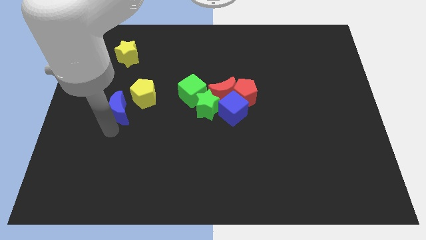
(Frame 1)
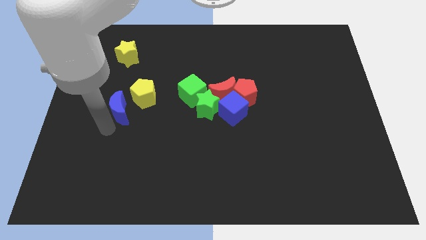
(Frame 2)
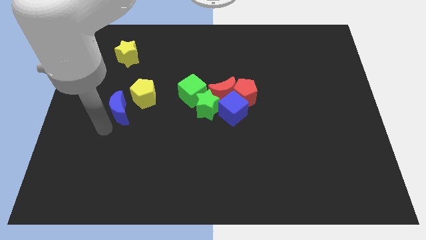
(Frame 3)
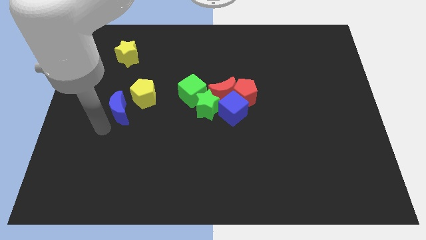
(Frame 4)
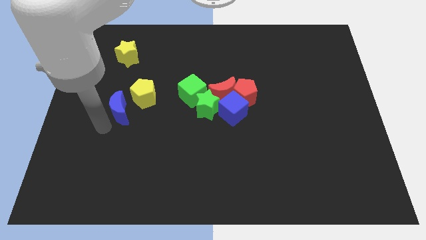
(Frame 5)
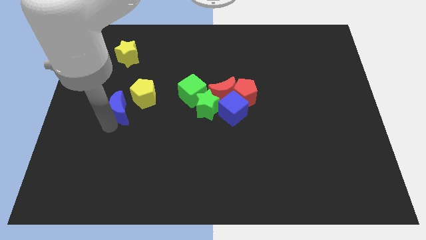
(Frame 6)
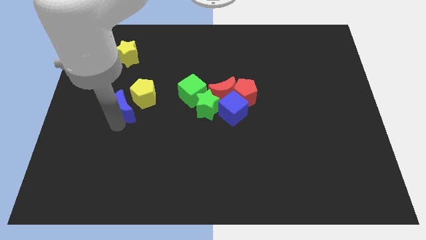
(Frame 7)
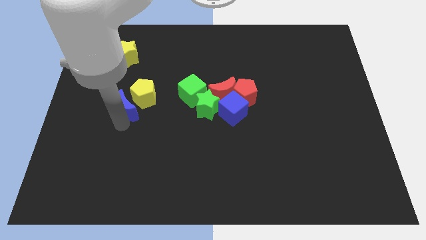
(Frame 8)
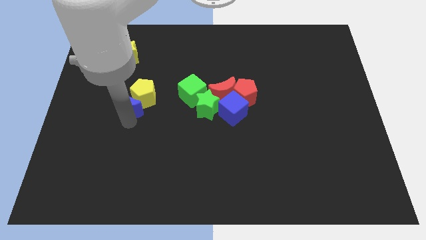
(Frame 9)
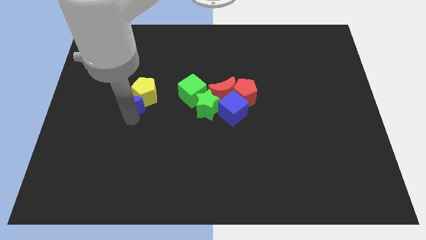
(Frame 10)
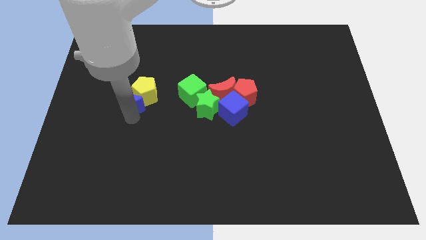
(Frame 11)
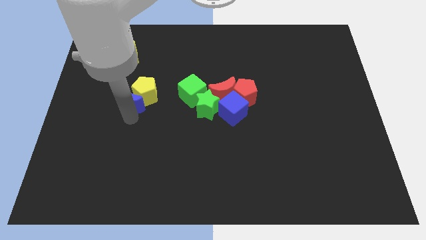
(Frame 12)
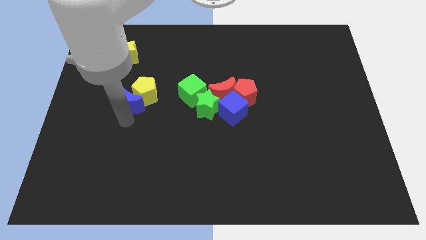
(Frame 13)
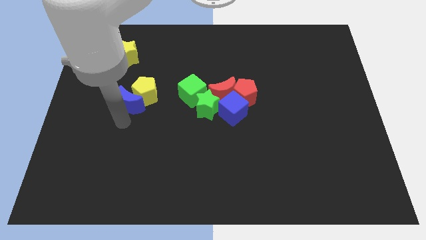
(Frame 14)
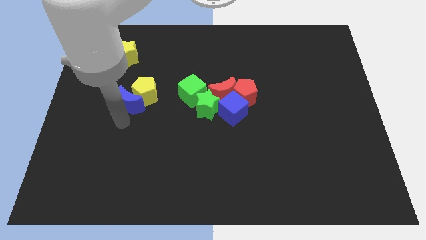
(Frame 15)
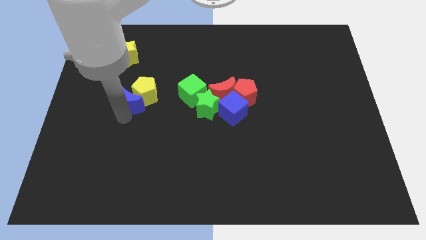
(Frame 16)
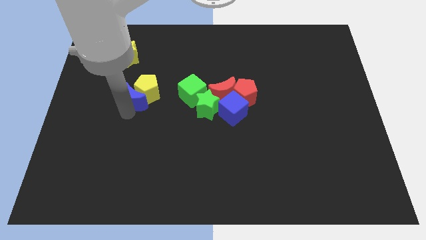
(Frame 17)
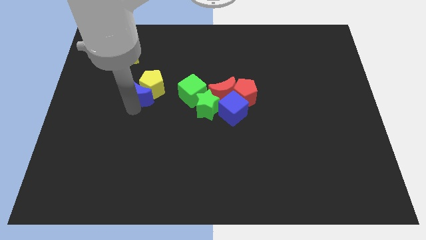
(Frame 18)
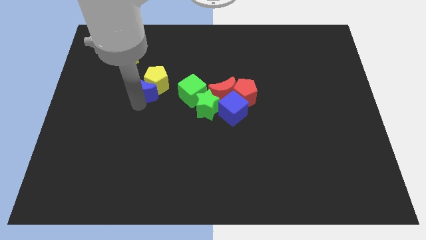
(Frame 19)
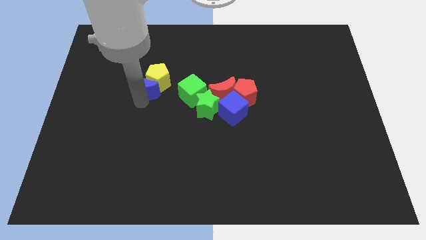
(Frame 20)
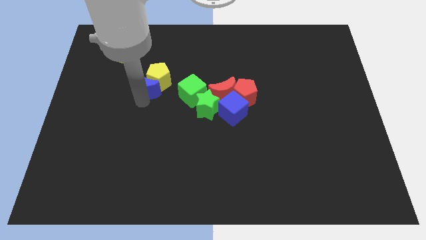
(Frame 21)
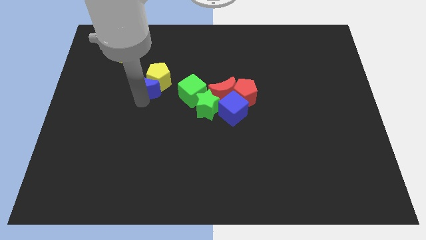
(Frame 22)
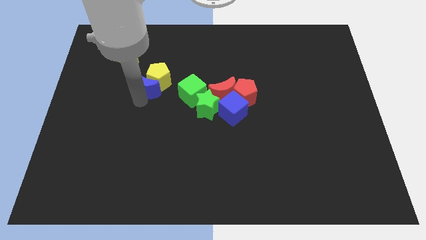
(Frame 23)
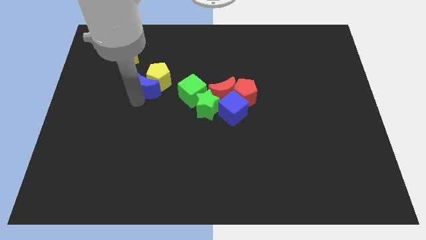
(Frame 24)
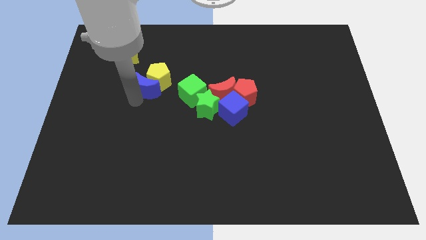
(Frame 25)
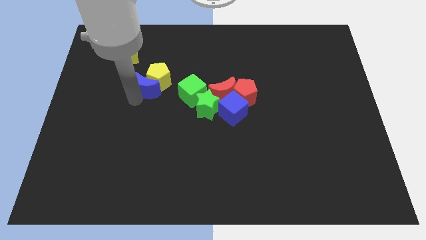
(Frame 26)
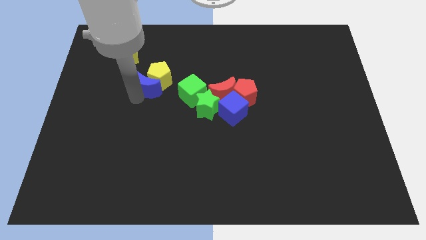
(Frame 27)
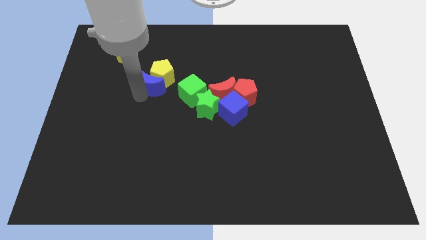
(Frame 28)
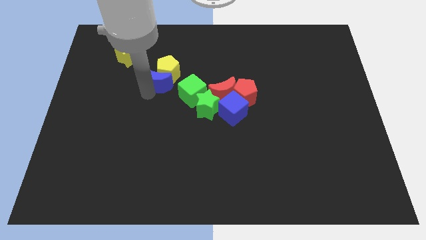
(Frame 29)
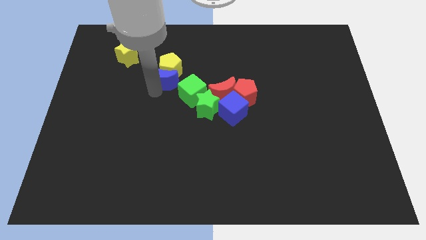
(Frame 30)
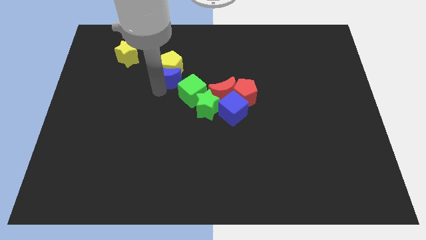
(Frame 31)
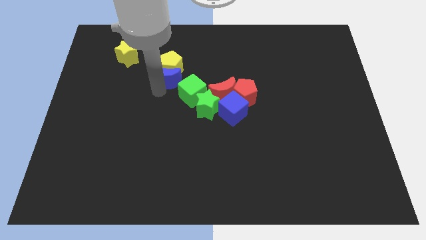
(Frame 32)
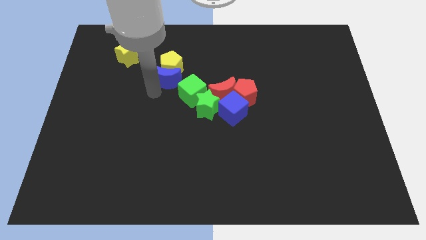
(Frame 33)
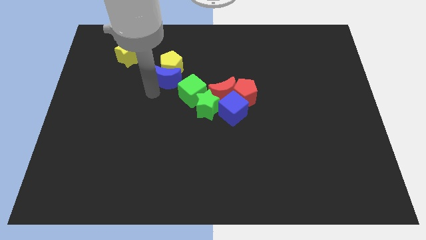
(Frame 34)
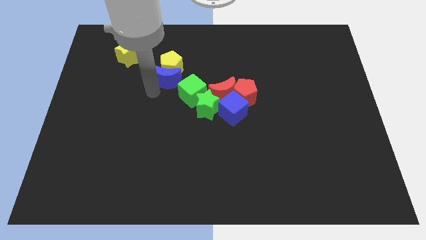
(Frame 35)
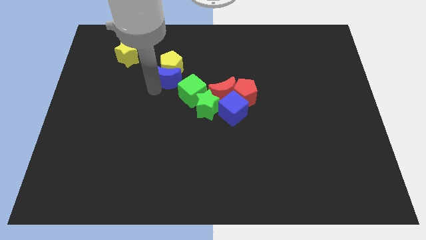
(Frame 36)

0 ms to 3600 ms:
move the blue crescent along with the yellow pentagon to the top

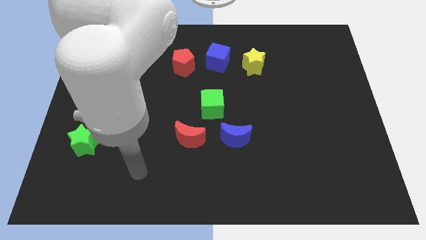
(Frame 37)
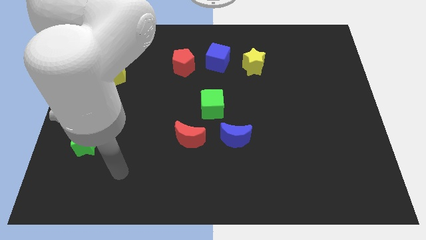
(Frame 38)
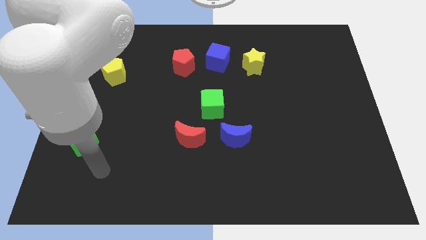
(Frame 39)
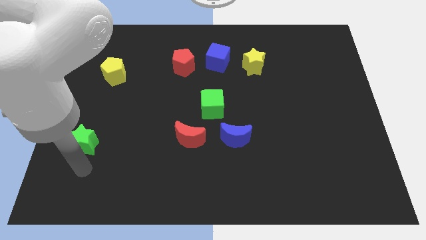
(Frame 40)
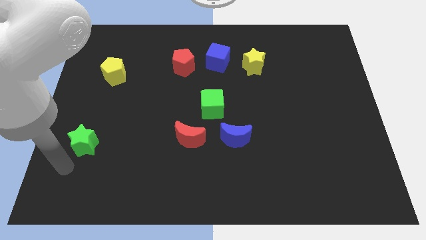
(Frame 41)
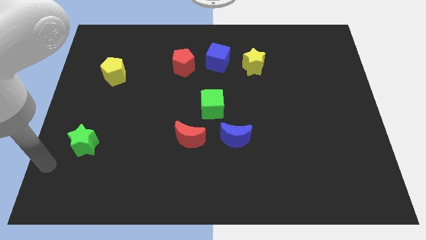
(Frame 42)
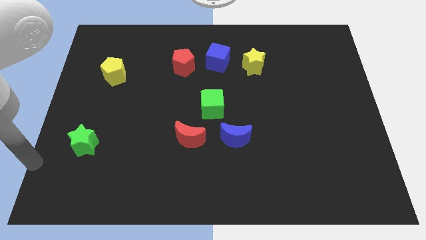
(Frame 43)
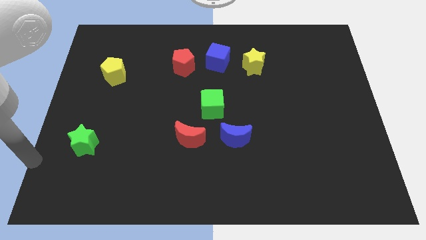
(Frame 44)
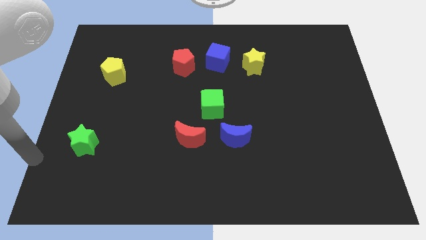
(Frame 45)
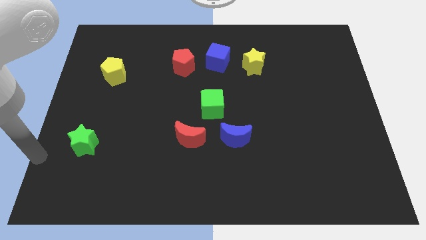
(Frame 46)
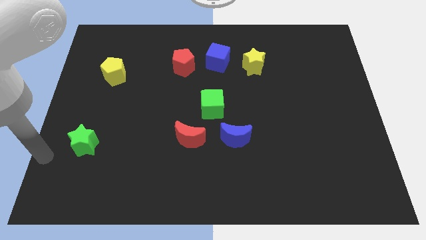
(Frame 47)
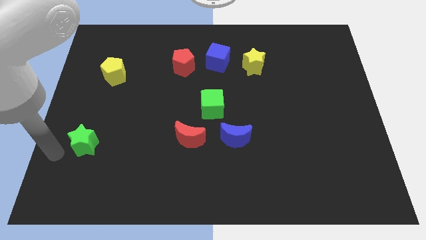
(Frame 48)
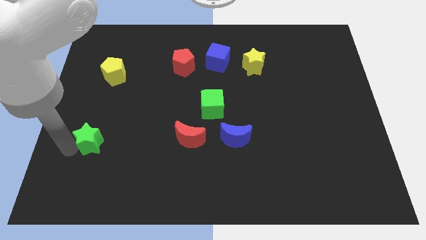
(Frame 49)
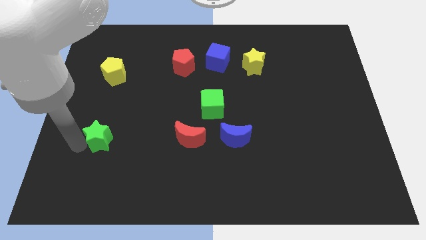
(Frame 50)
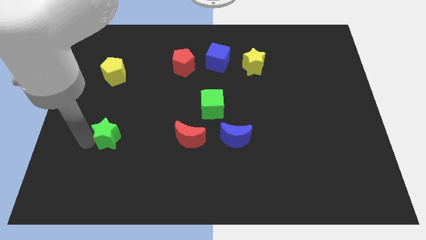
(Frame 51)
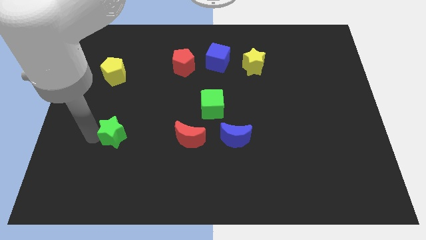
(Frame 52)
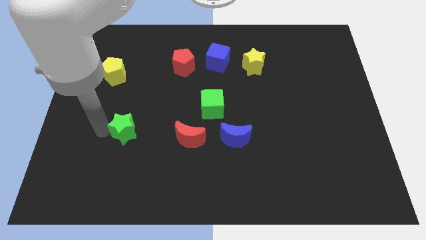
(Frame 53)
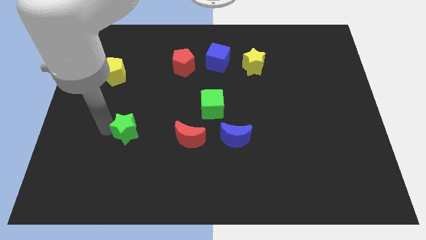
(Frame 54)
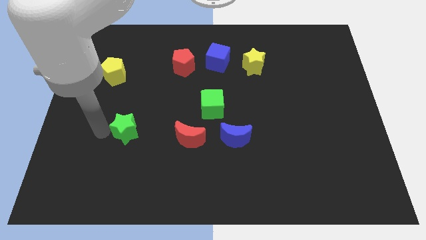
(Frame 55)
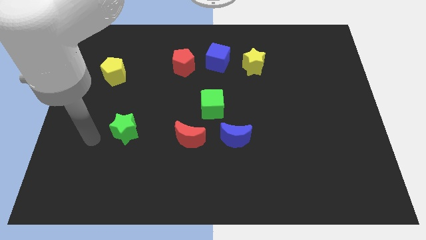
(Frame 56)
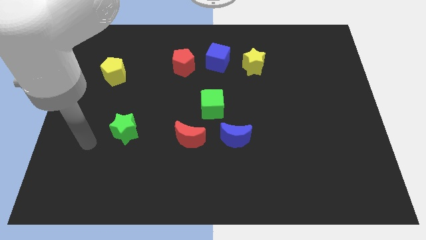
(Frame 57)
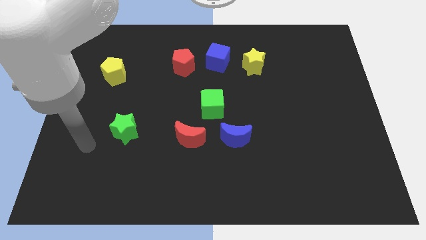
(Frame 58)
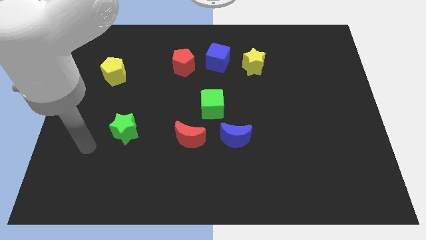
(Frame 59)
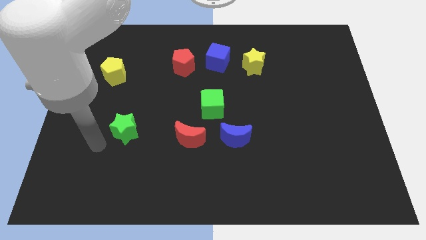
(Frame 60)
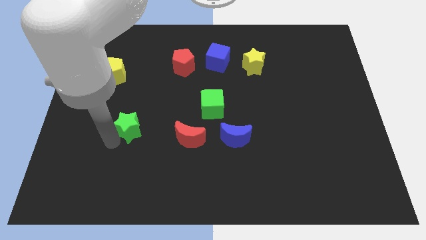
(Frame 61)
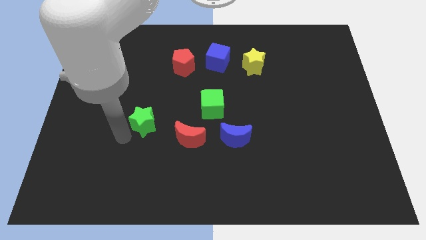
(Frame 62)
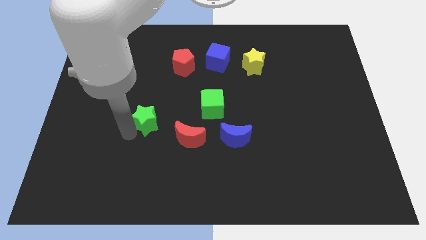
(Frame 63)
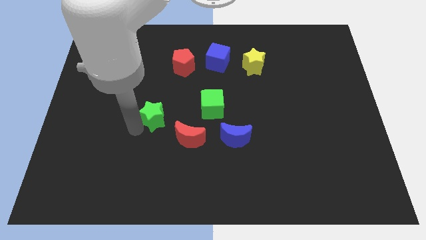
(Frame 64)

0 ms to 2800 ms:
move the green star between yellow pentagona nd red moon

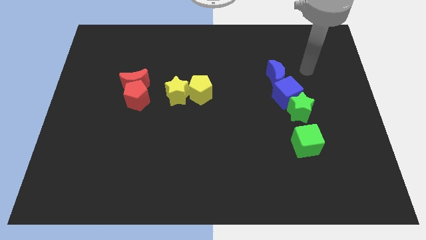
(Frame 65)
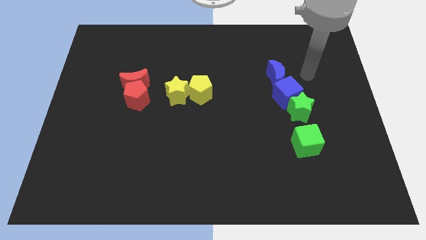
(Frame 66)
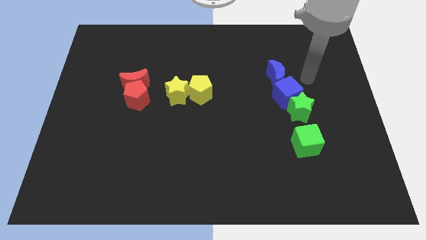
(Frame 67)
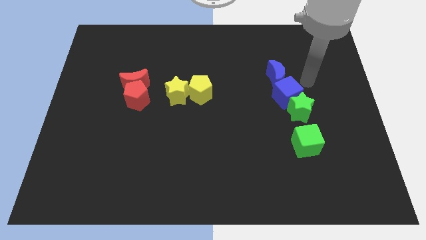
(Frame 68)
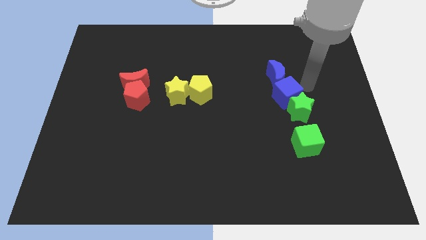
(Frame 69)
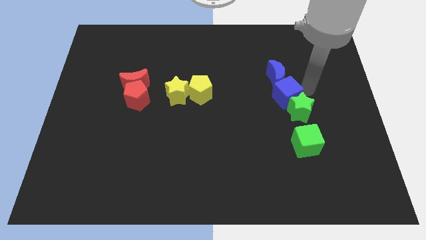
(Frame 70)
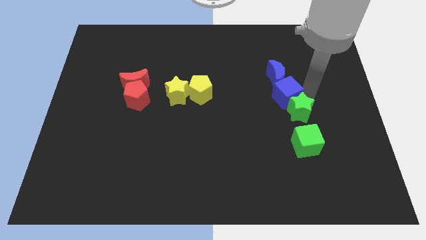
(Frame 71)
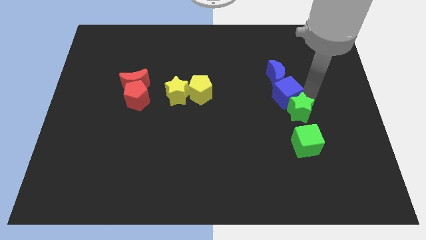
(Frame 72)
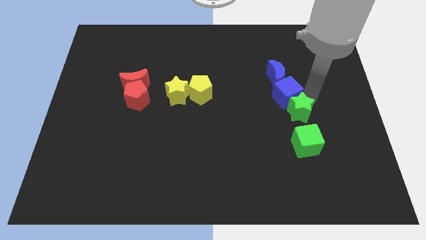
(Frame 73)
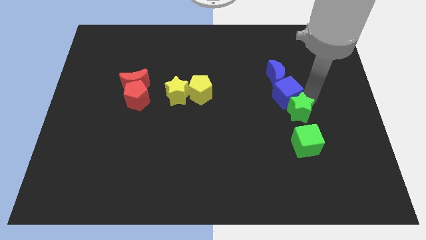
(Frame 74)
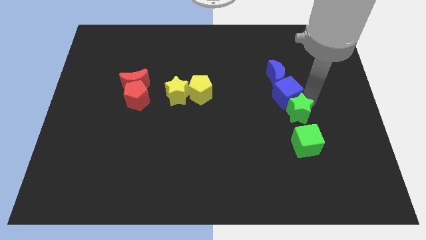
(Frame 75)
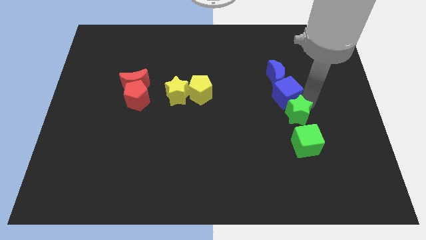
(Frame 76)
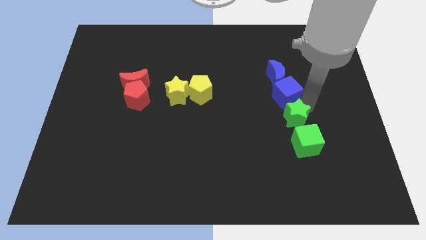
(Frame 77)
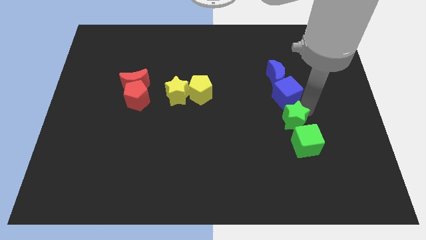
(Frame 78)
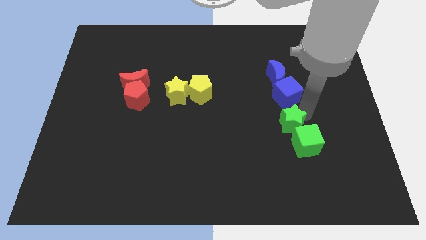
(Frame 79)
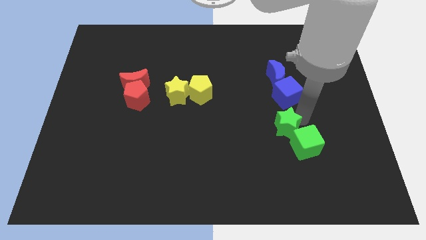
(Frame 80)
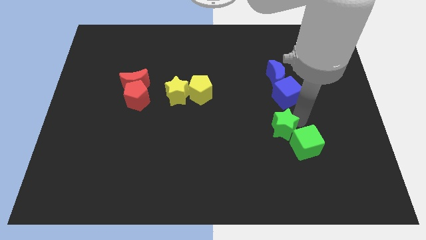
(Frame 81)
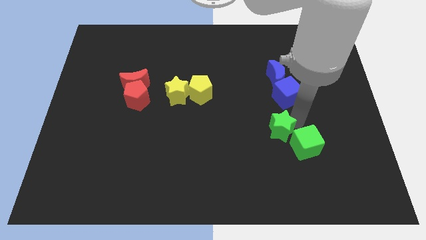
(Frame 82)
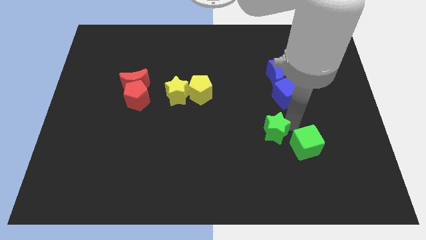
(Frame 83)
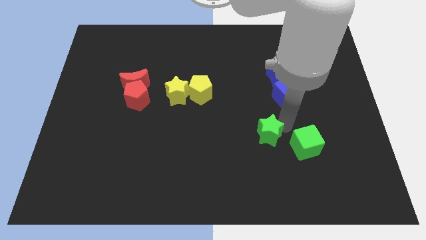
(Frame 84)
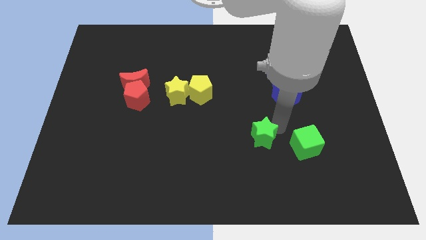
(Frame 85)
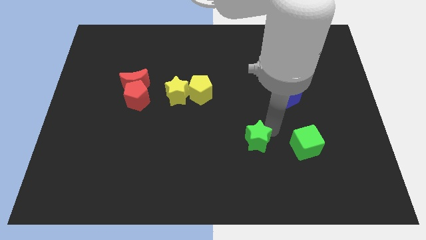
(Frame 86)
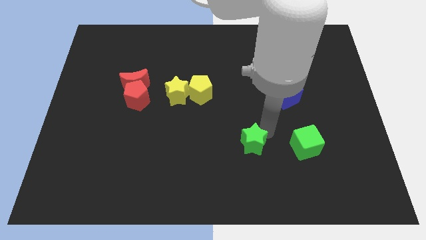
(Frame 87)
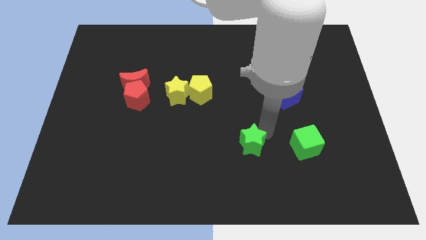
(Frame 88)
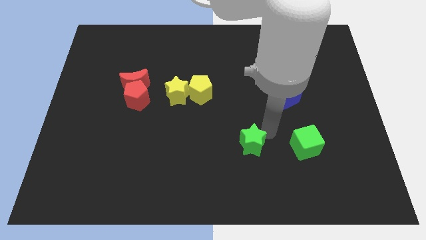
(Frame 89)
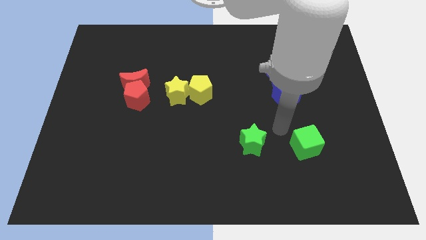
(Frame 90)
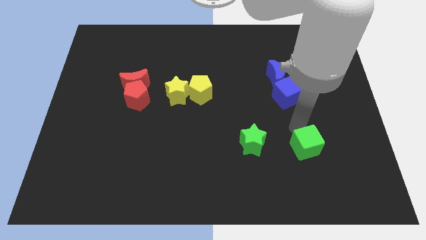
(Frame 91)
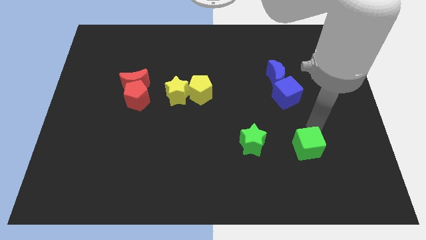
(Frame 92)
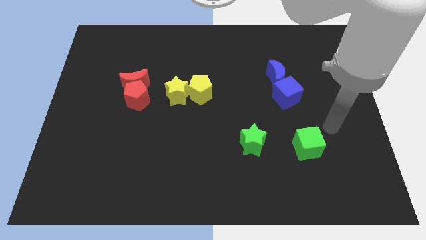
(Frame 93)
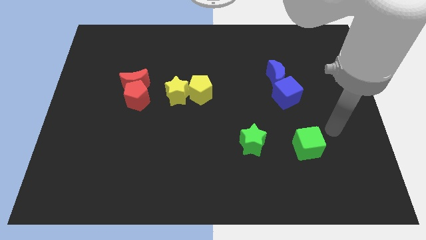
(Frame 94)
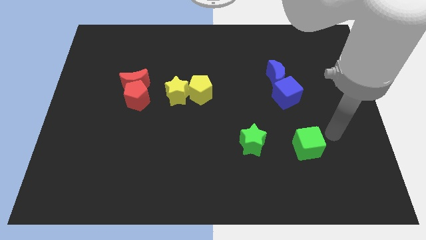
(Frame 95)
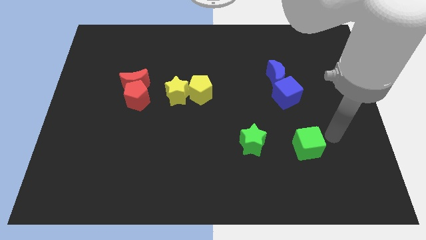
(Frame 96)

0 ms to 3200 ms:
move the green star to the left side of the board
